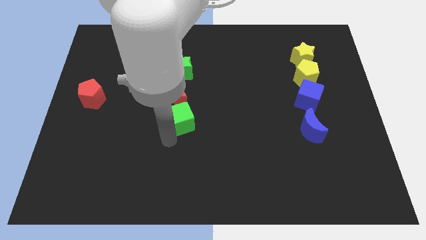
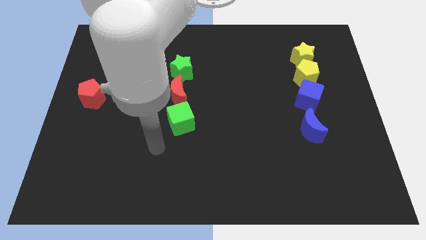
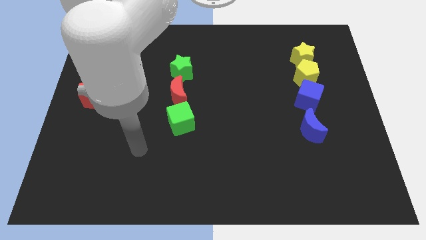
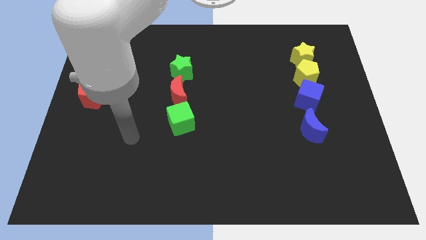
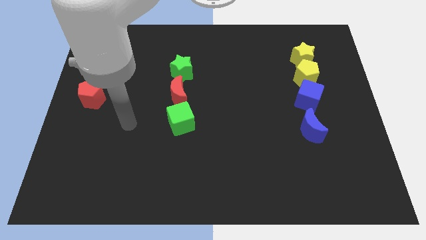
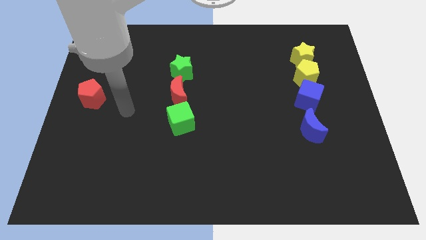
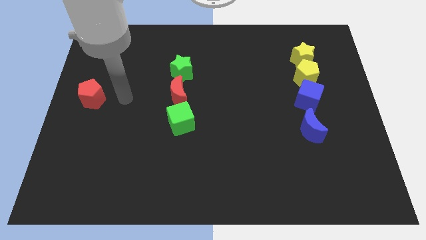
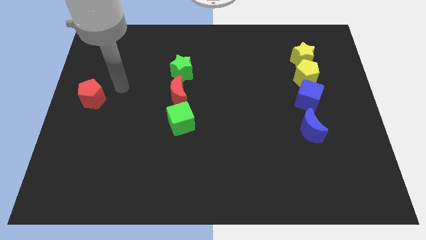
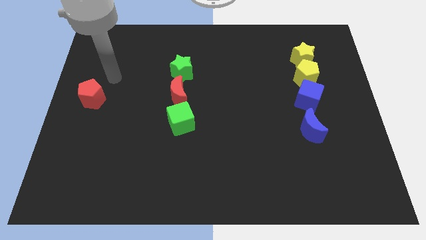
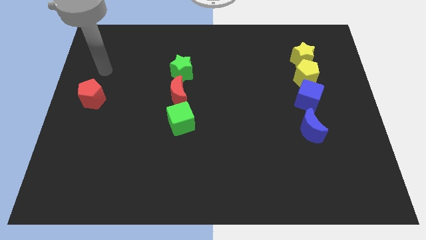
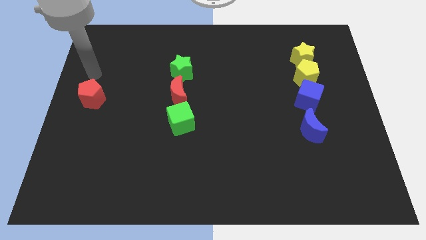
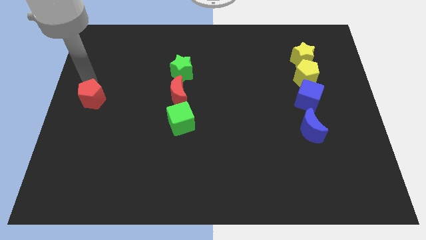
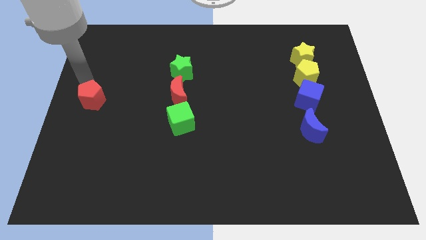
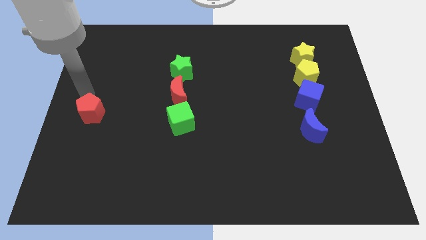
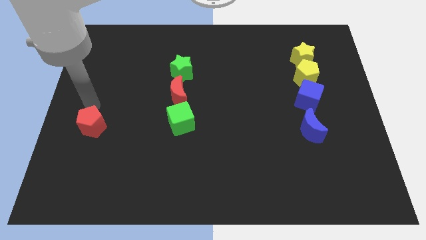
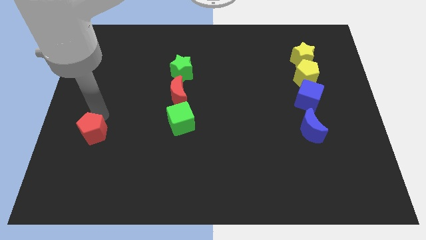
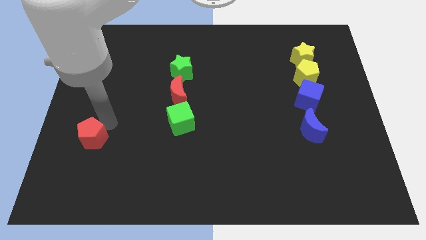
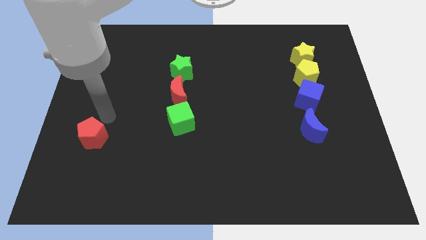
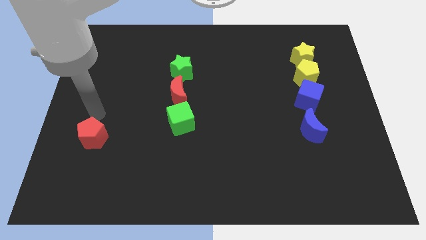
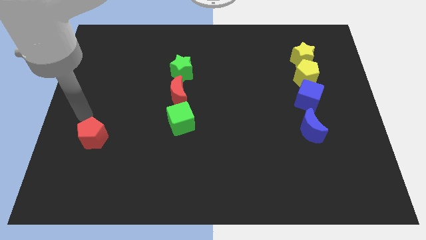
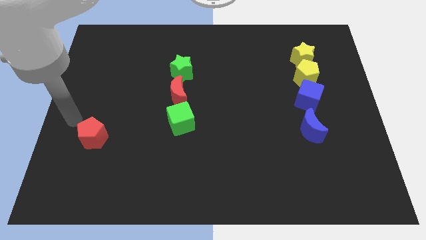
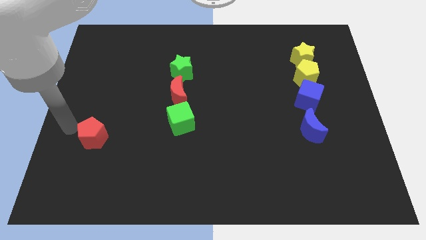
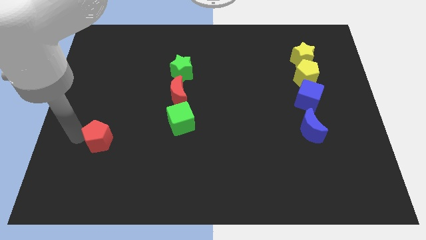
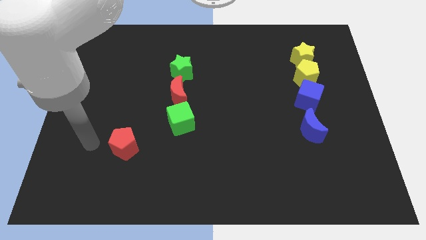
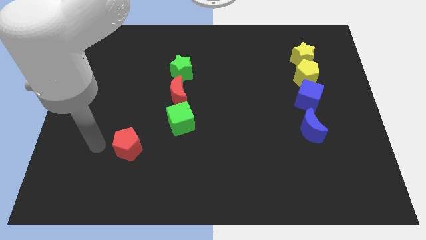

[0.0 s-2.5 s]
move your arm away from the green cube

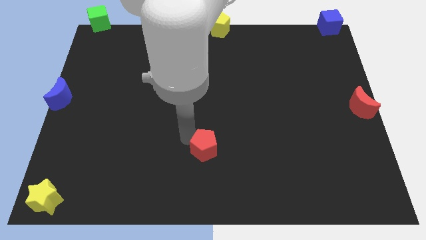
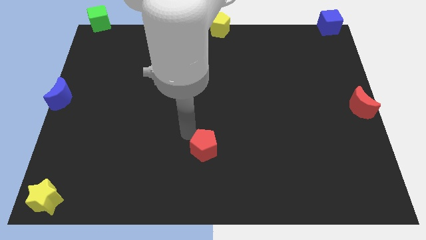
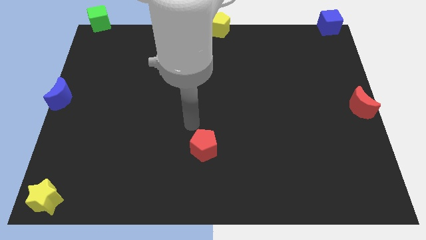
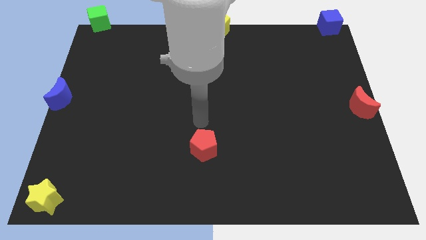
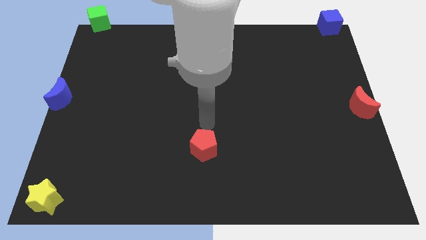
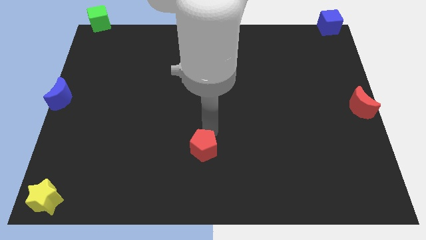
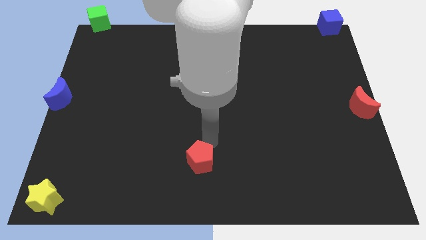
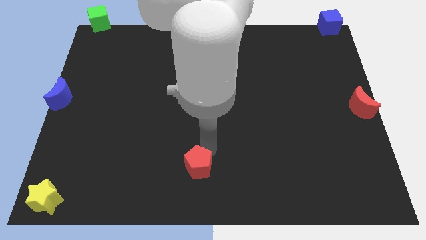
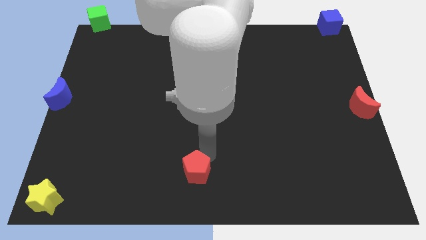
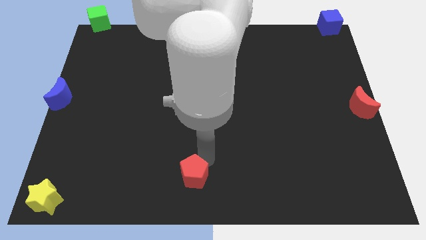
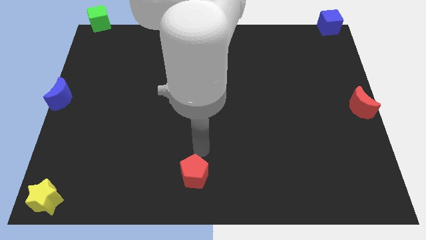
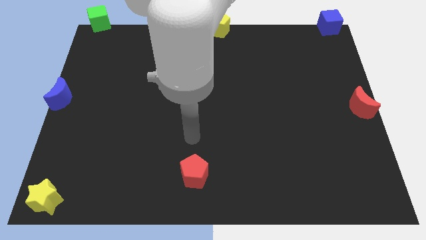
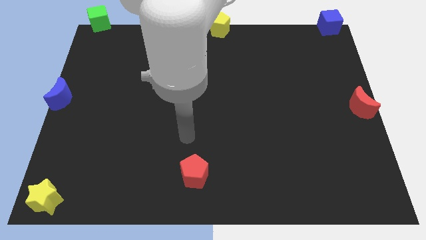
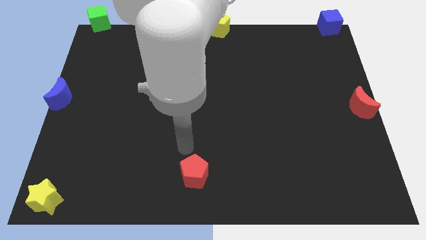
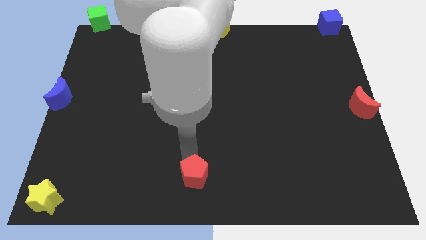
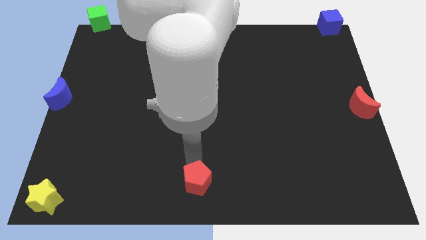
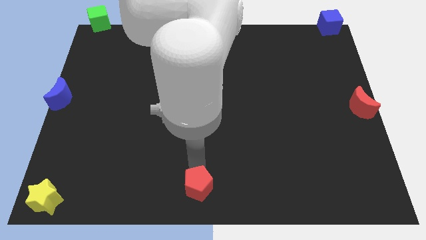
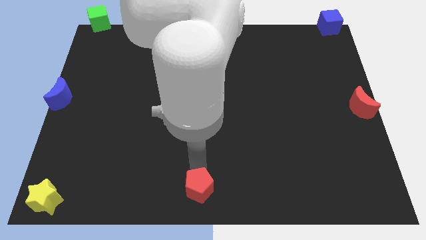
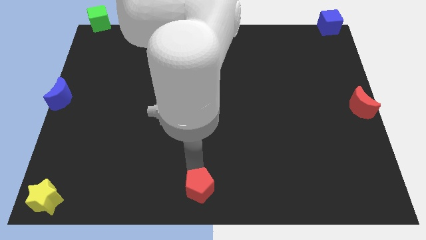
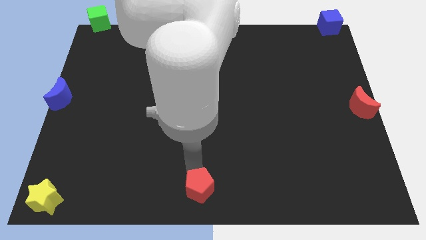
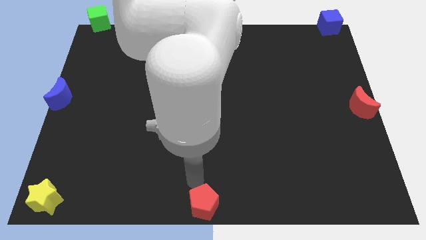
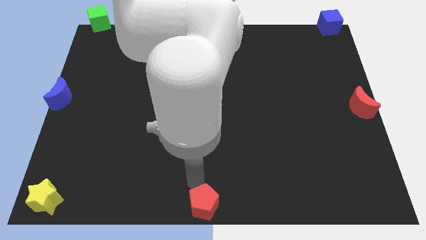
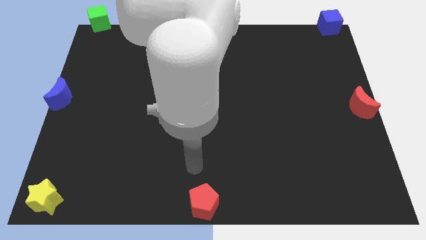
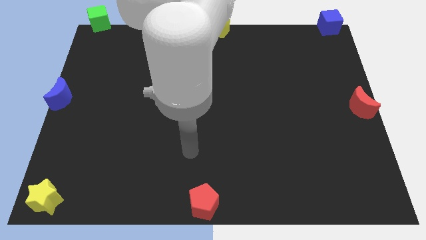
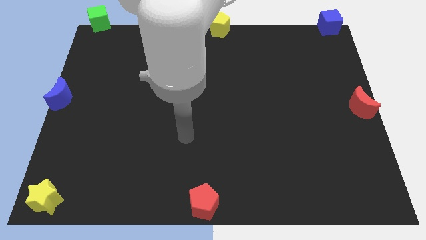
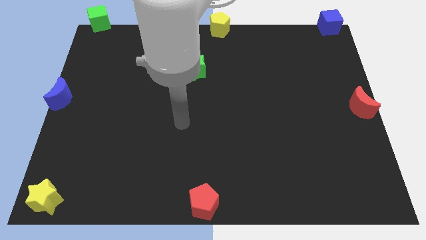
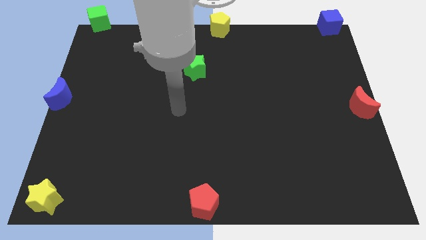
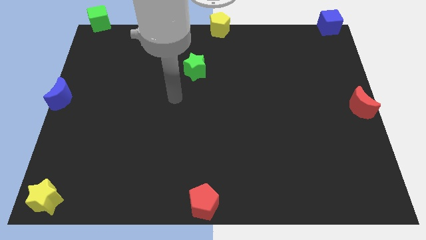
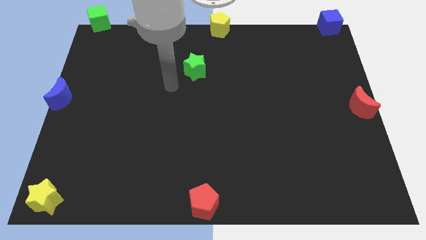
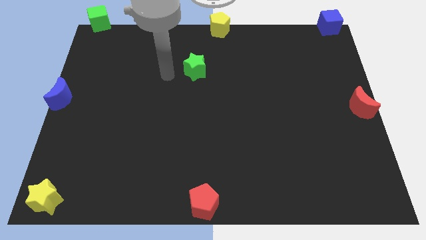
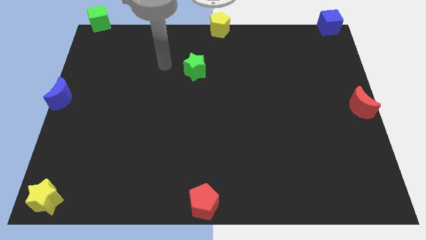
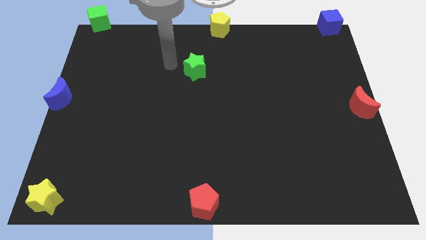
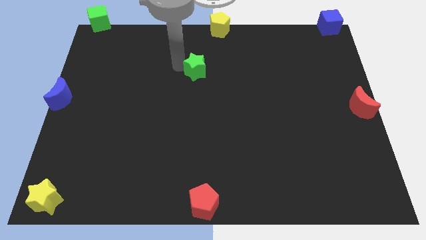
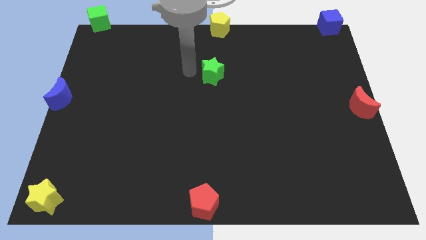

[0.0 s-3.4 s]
drag the red pentagon towards bottom center

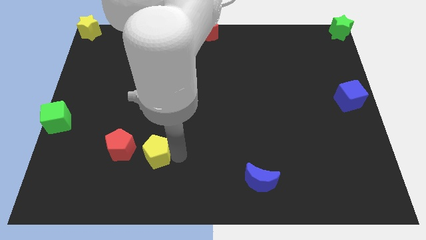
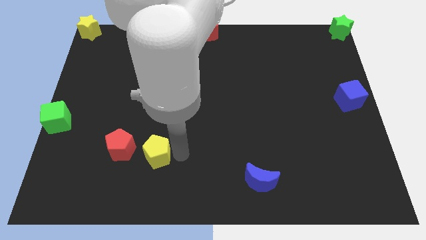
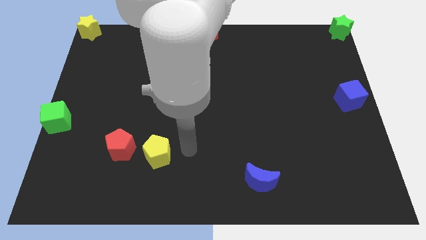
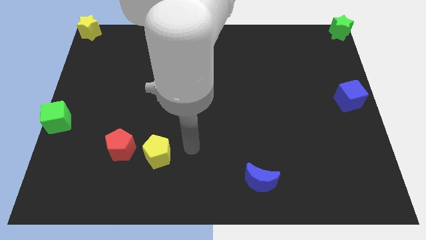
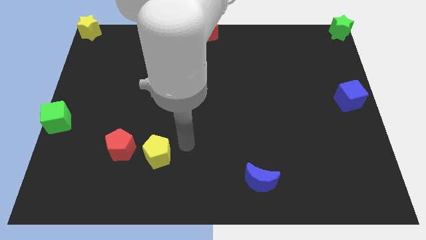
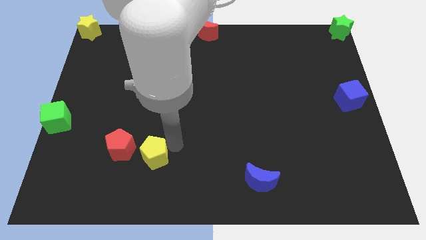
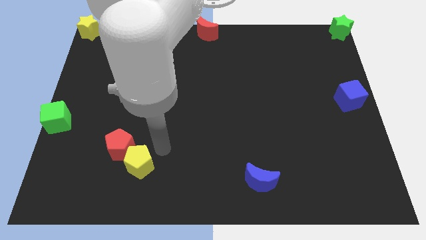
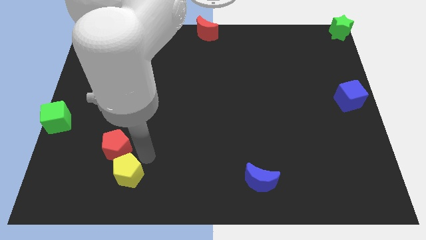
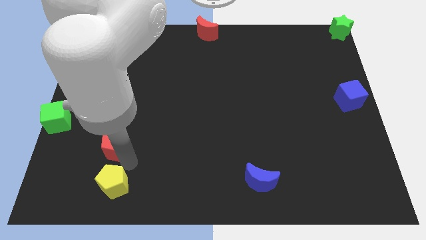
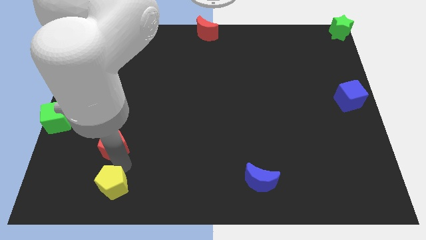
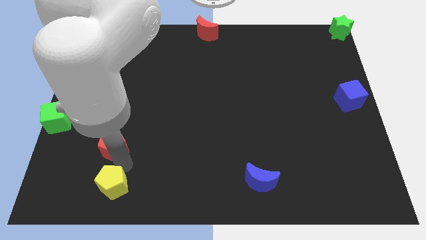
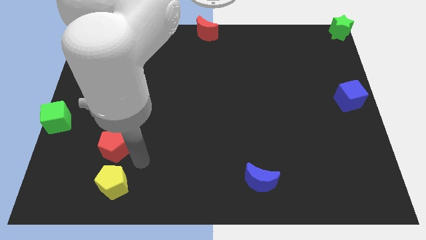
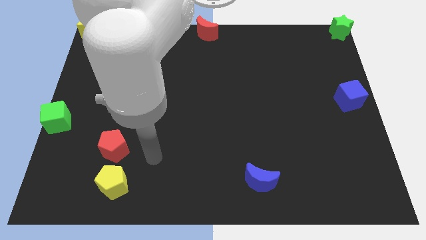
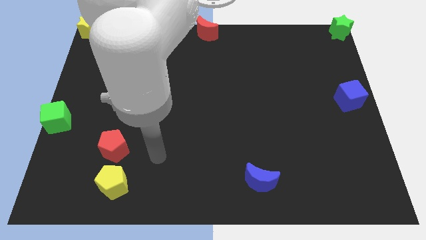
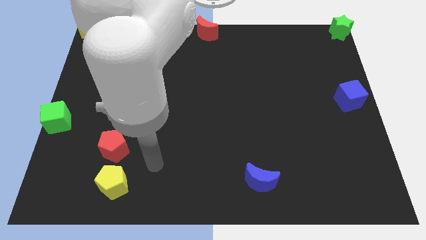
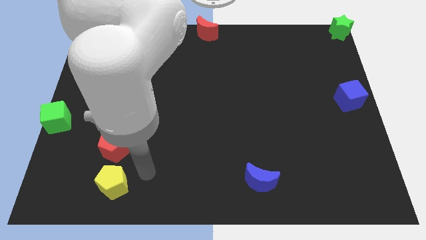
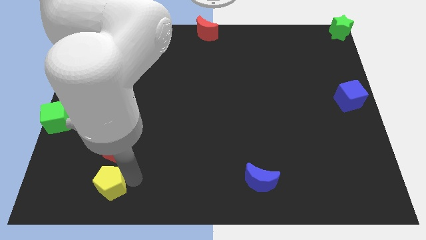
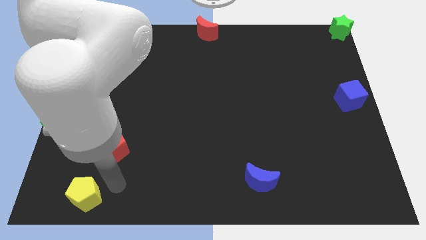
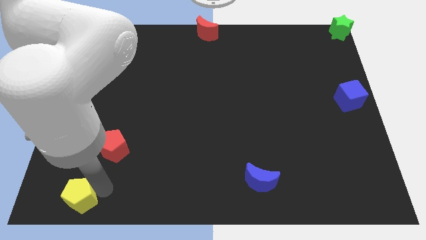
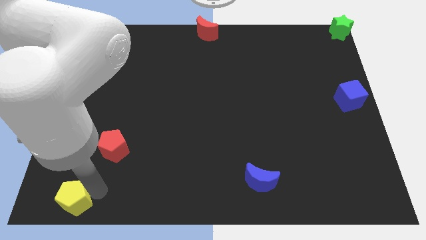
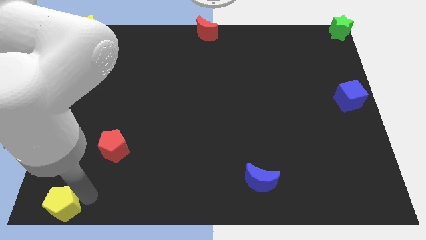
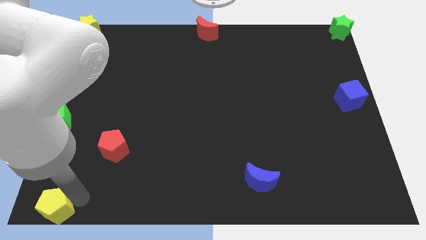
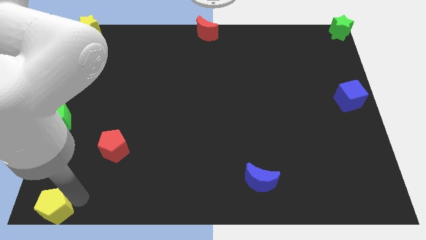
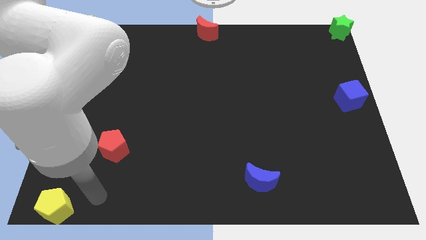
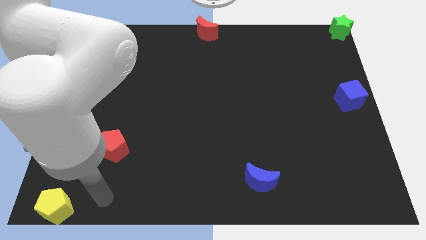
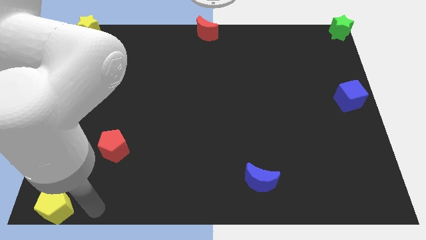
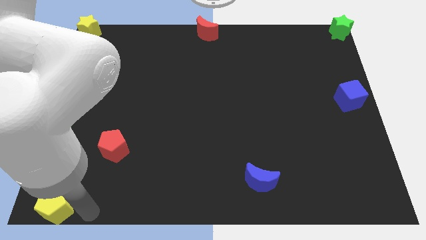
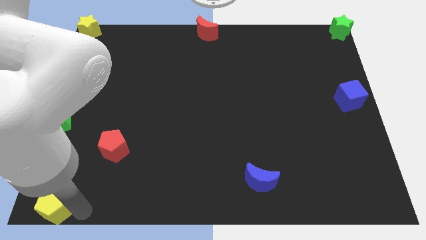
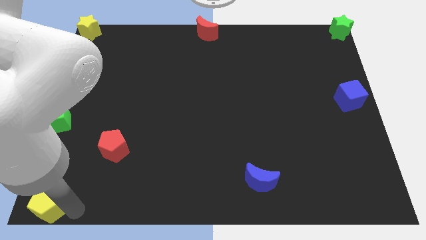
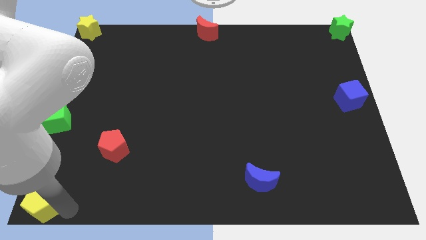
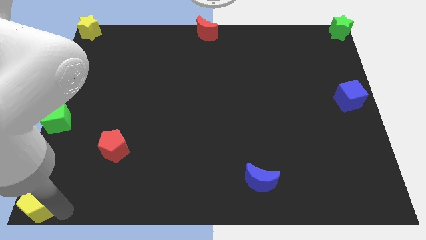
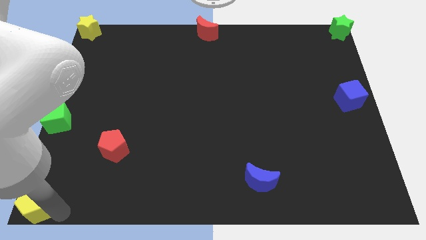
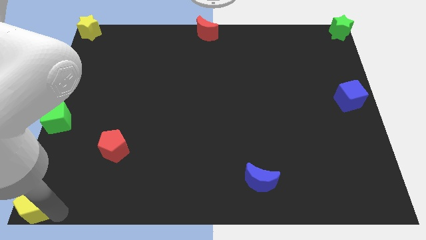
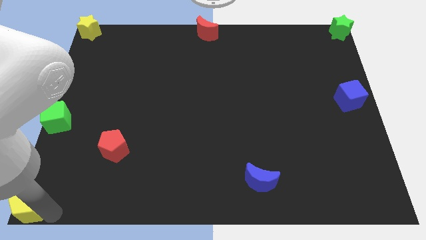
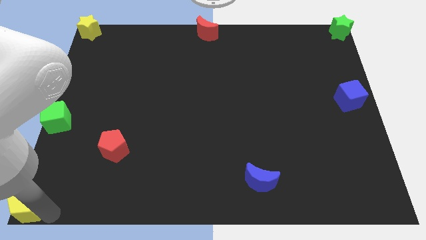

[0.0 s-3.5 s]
push the yellow pentagon to the bottom left corner of the table
